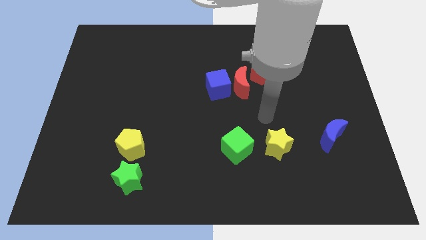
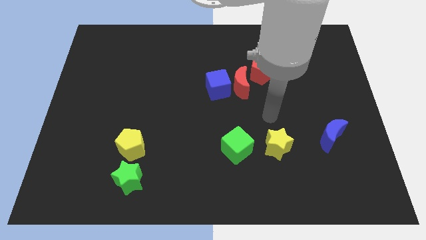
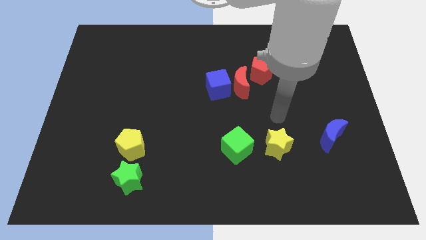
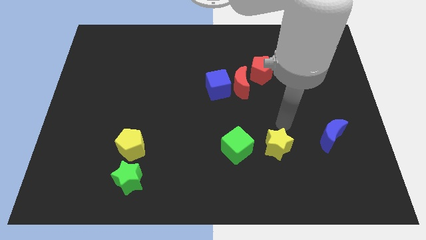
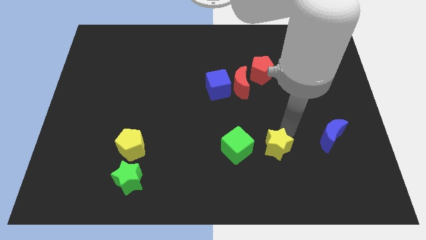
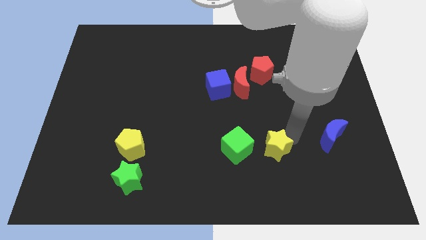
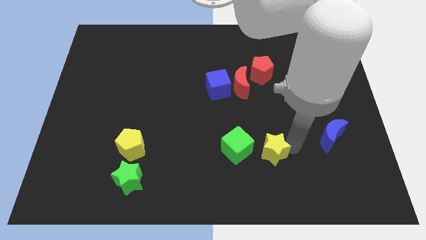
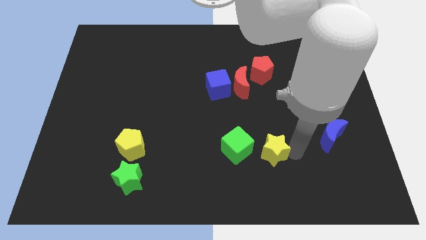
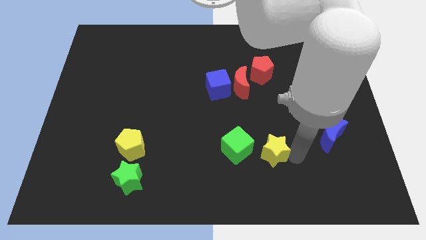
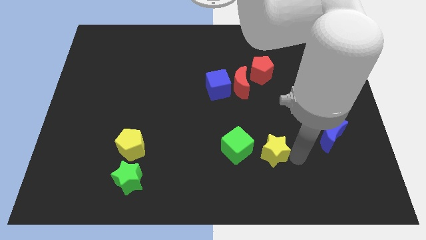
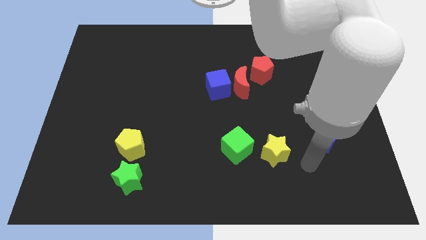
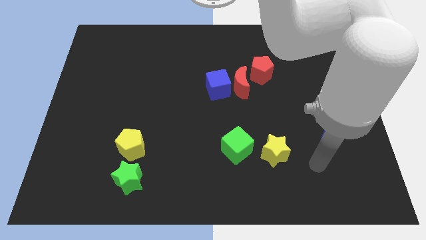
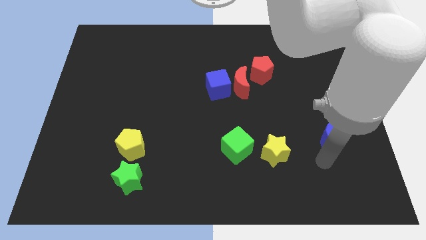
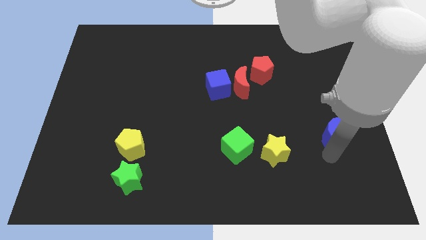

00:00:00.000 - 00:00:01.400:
push the yellow star slightly to the left

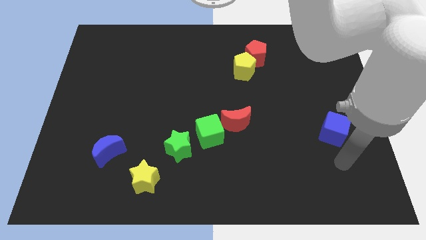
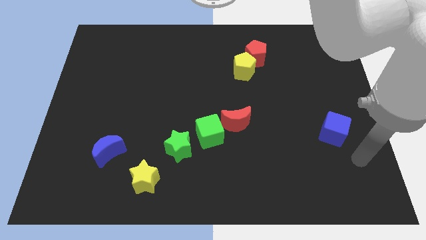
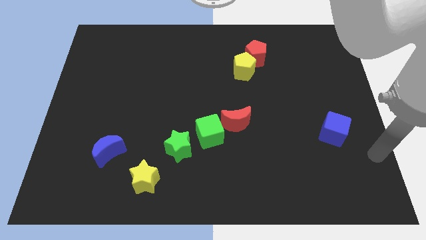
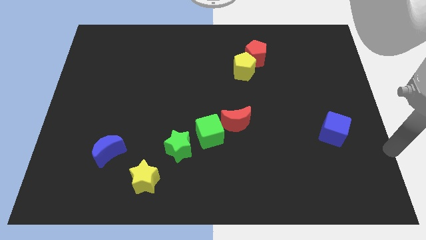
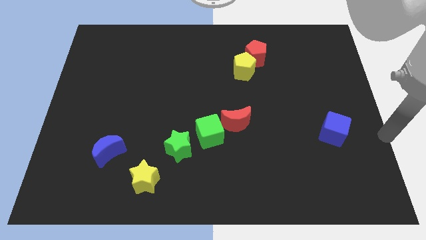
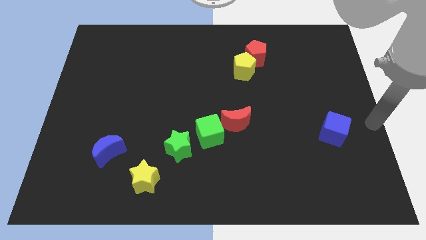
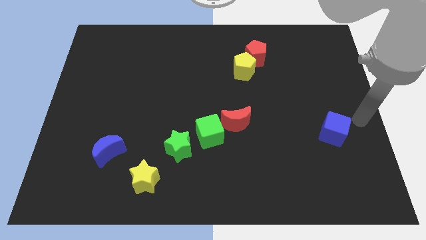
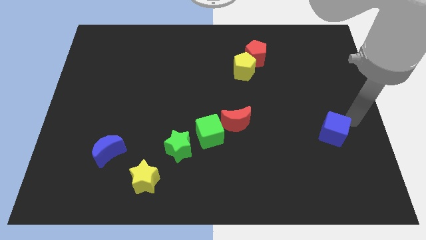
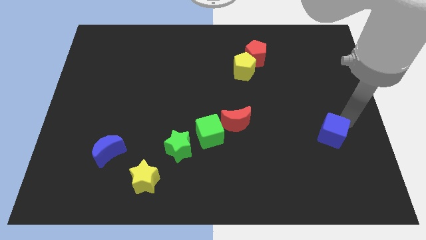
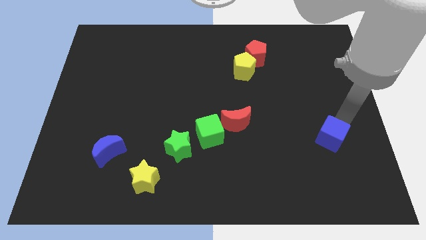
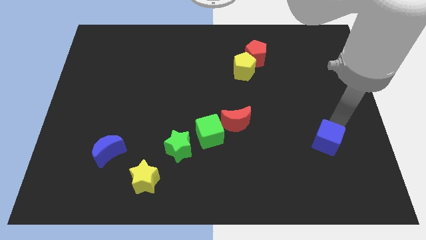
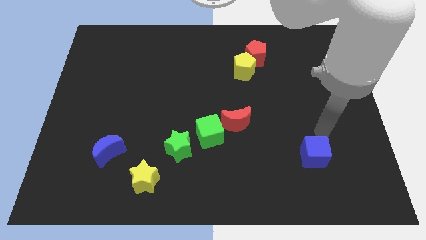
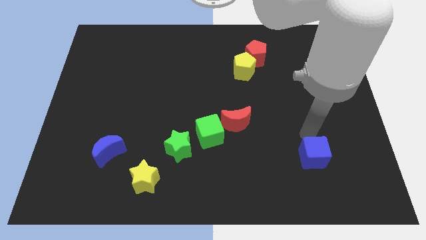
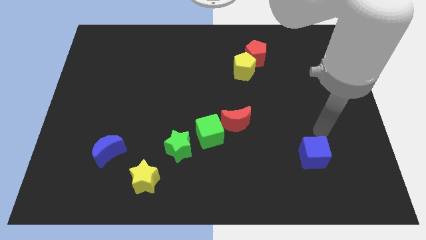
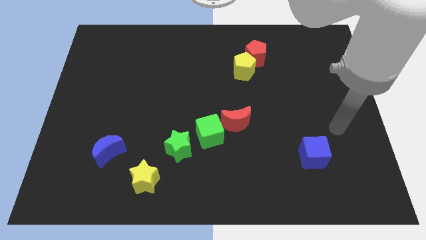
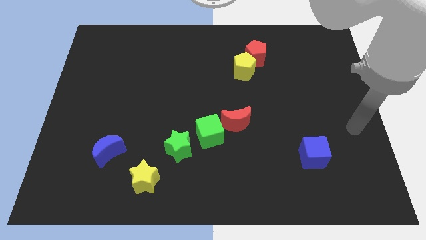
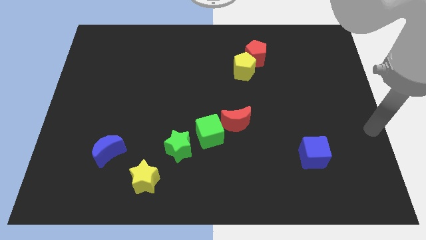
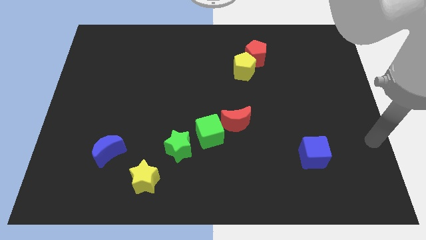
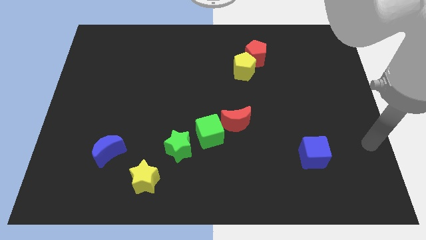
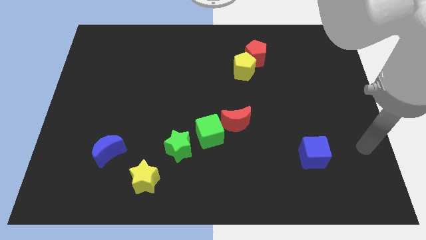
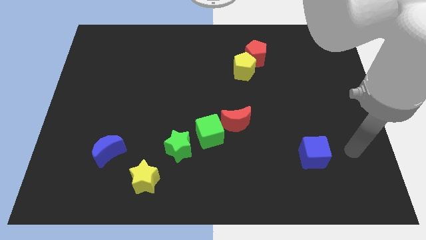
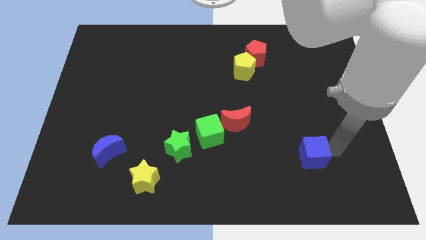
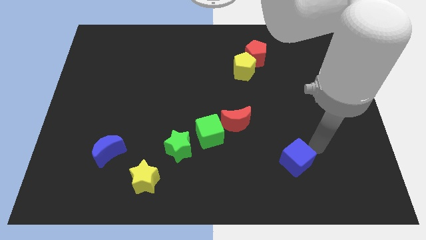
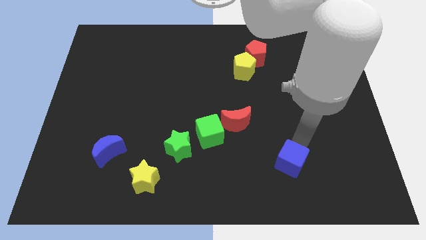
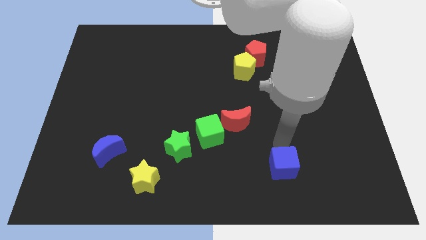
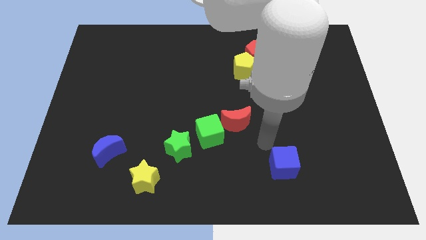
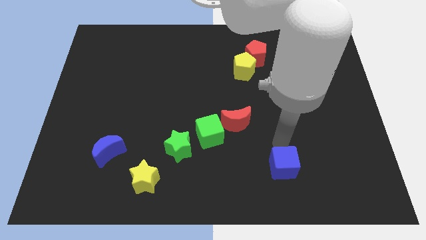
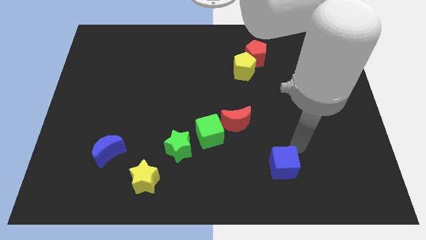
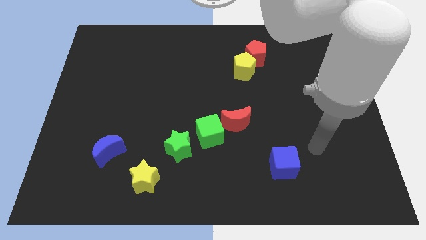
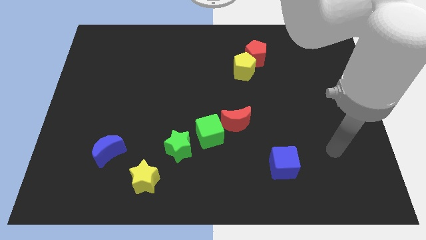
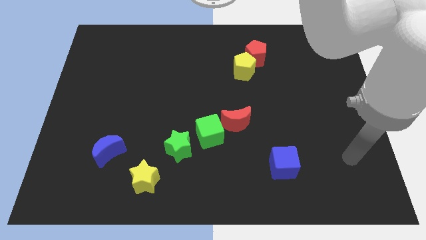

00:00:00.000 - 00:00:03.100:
slide the blue cube diagonally below the bottom right side of the red moon

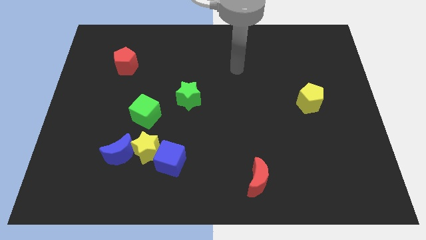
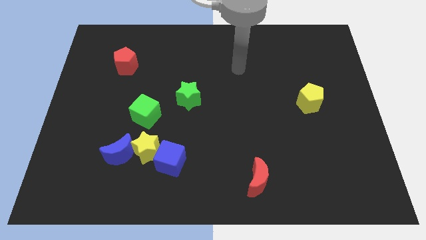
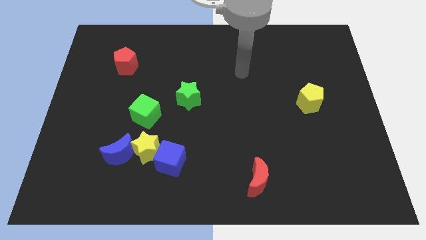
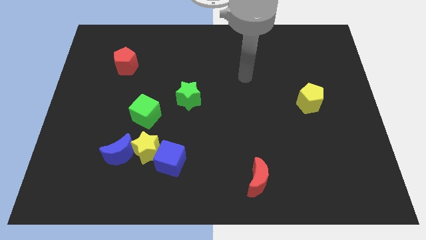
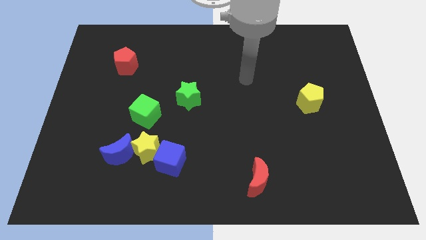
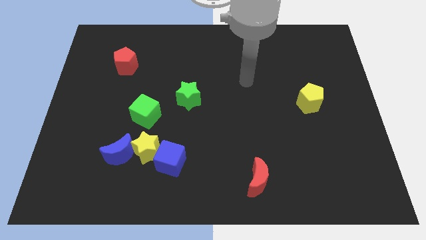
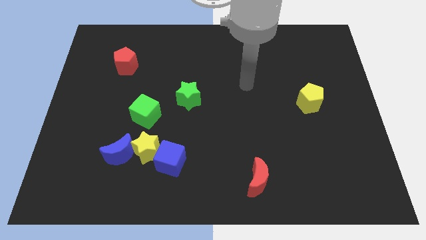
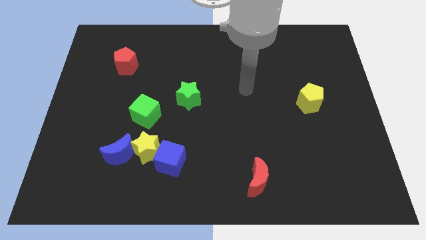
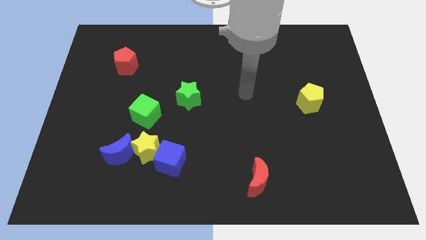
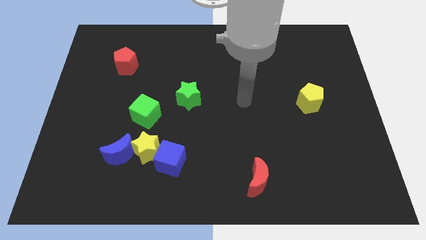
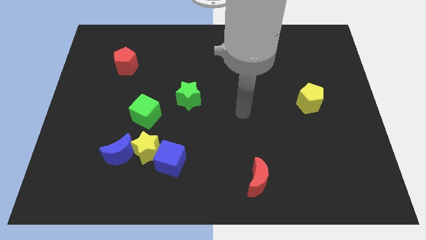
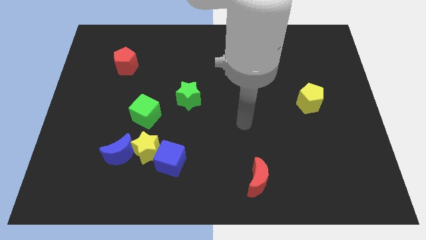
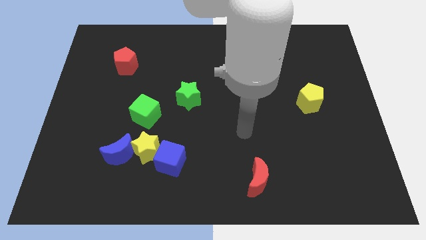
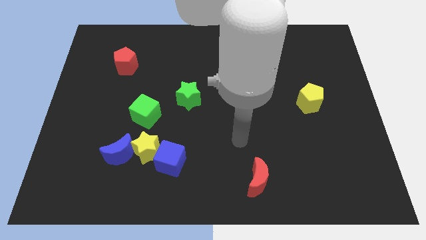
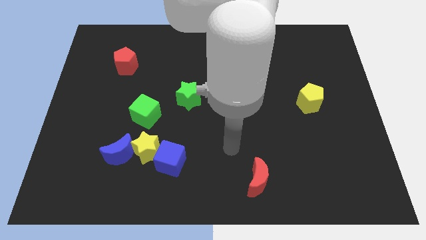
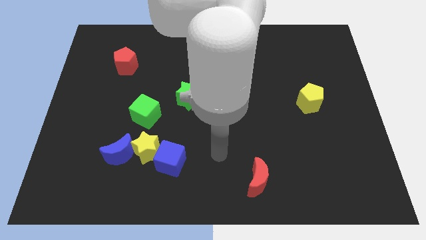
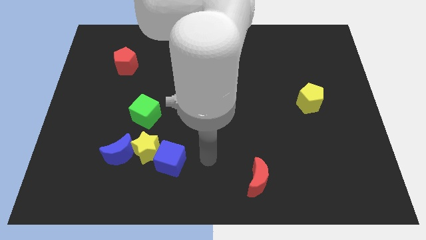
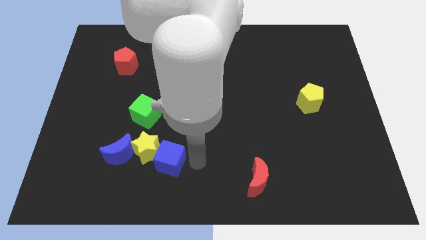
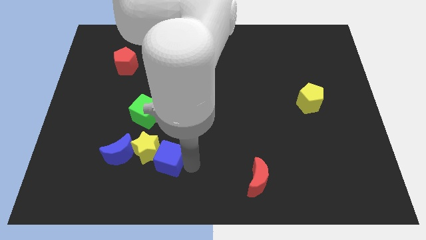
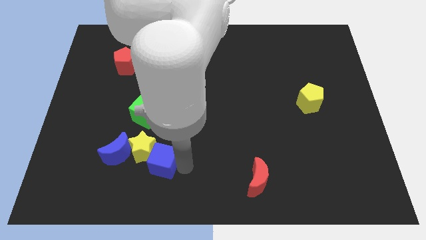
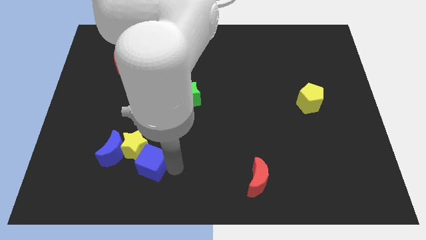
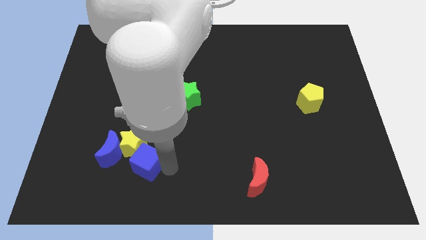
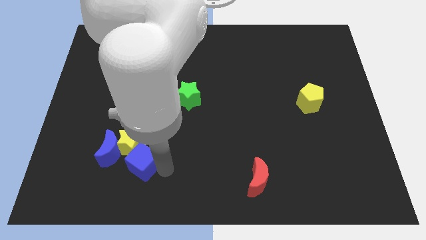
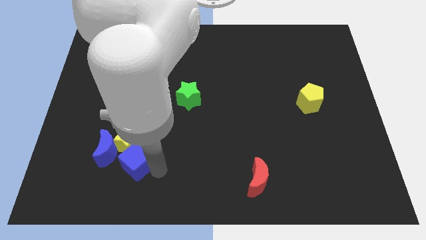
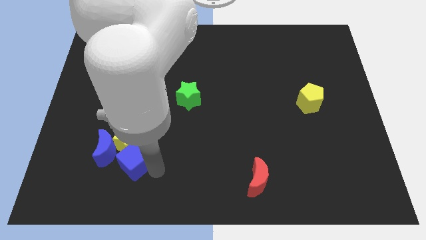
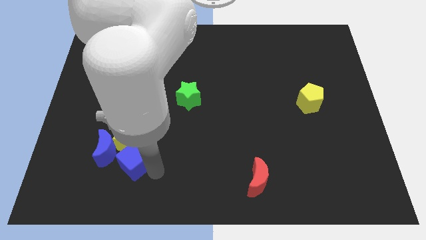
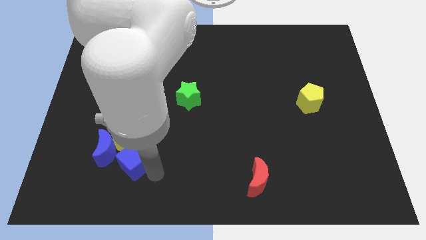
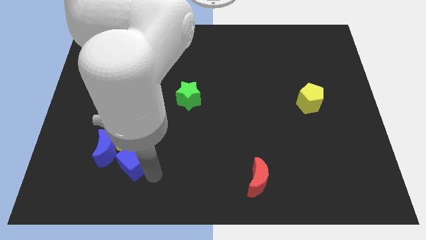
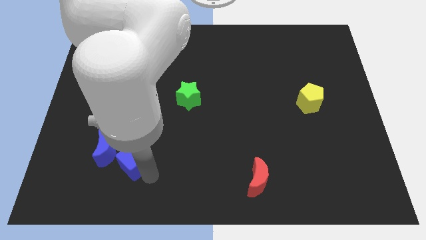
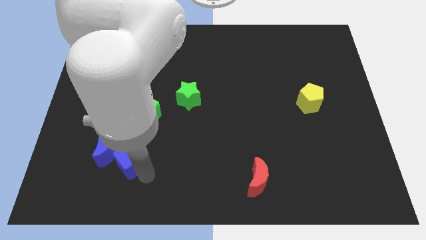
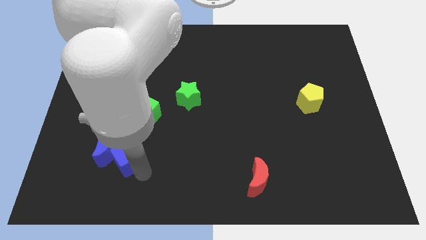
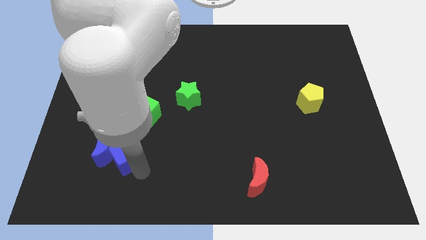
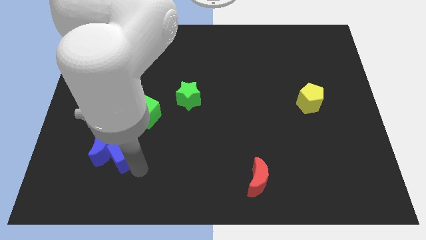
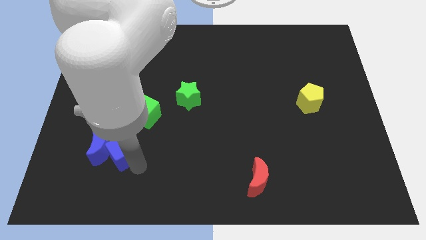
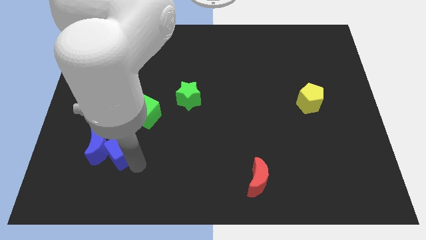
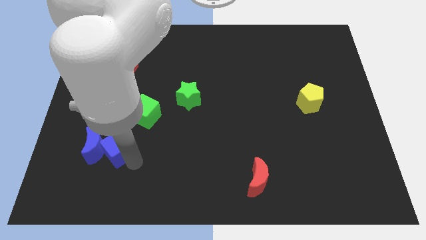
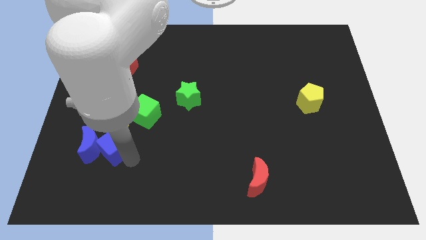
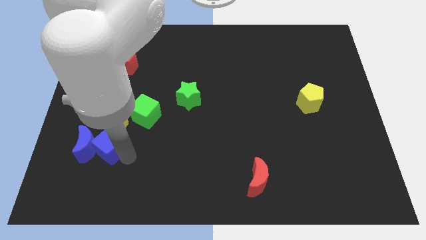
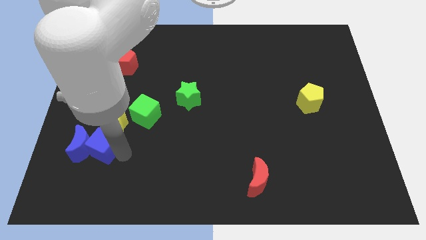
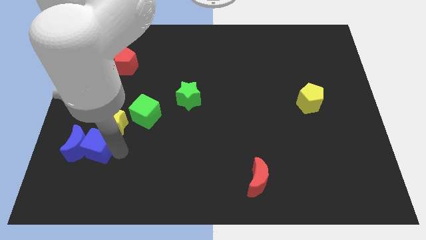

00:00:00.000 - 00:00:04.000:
move the blue cube and blue crescent towards the bottom left side of the board

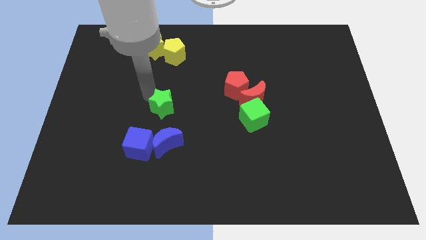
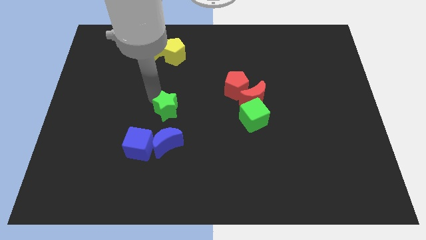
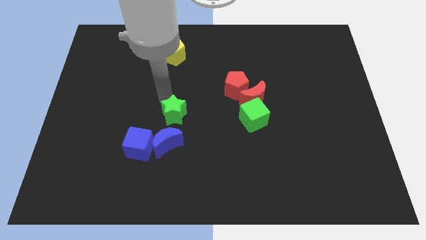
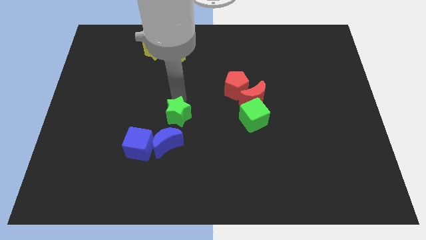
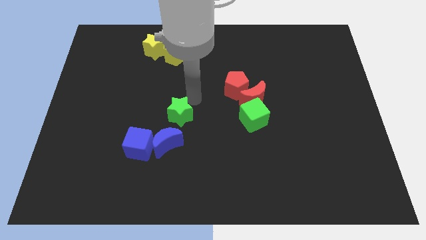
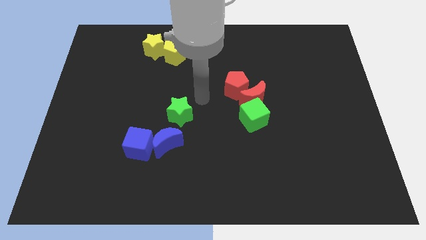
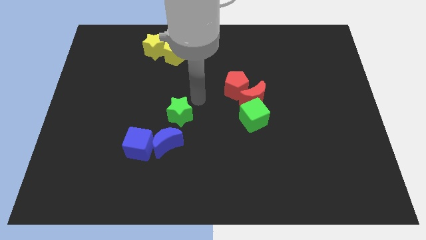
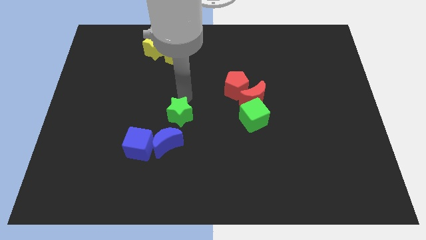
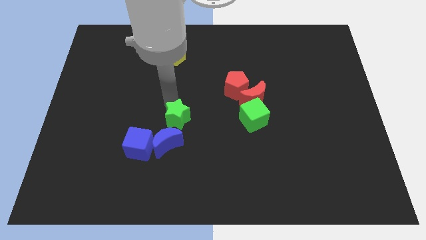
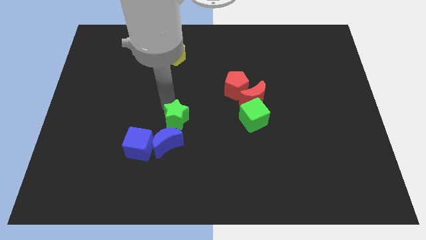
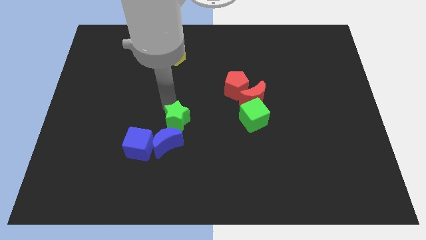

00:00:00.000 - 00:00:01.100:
place the green star above the blue crescent
